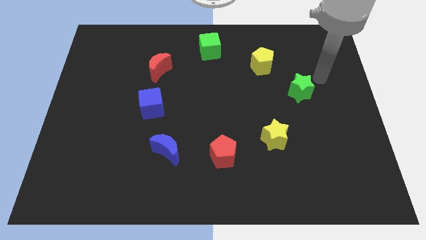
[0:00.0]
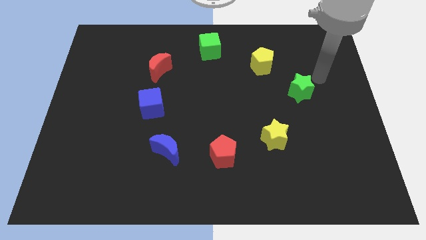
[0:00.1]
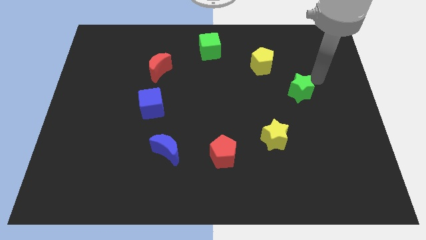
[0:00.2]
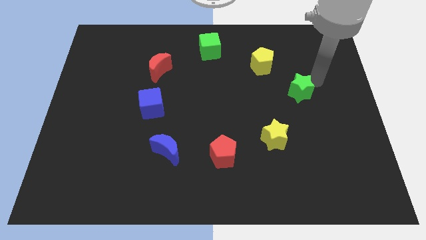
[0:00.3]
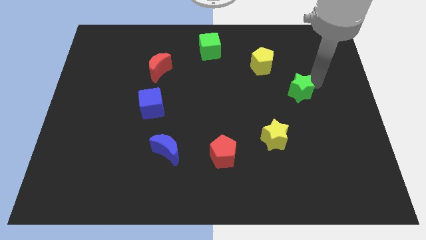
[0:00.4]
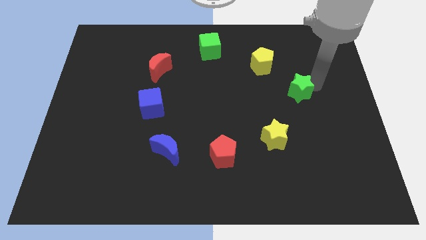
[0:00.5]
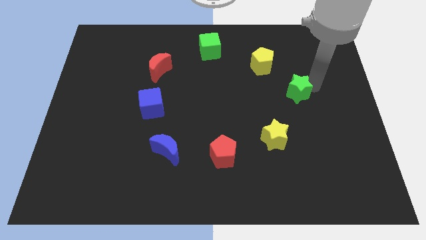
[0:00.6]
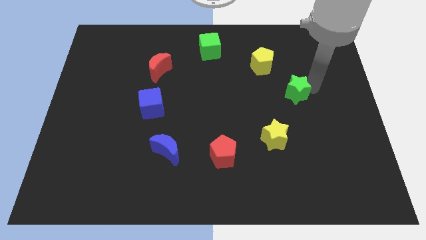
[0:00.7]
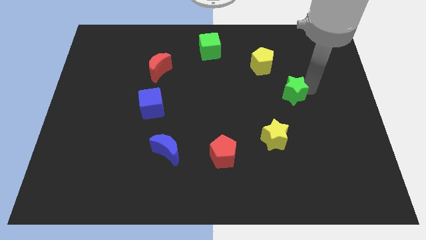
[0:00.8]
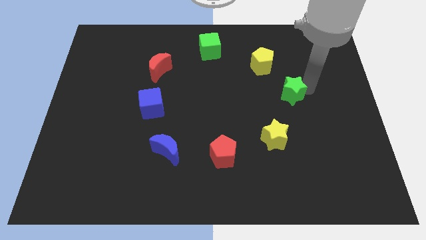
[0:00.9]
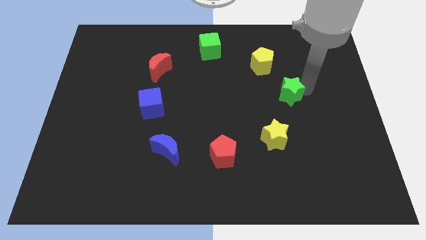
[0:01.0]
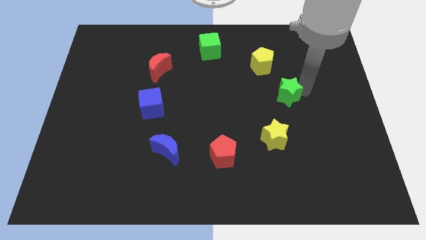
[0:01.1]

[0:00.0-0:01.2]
move the green star to the center of the board

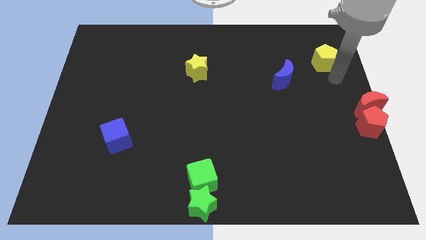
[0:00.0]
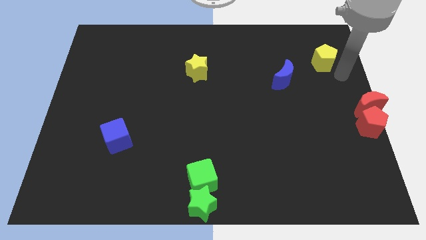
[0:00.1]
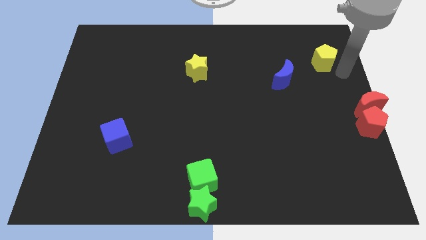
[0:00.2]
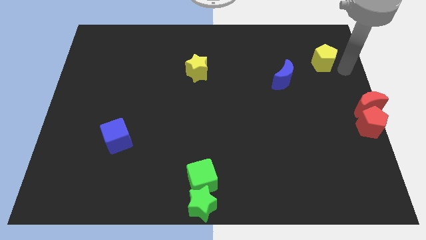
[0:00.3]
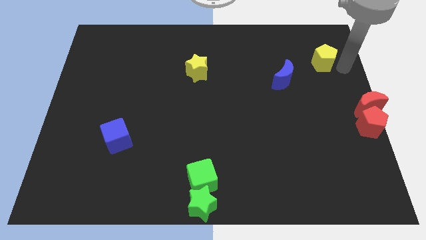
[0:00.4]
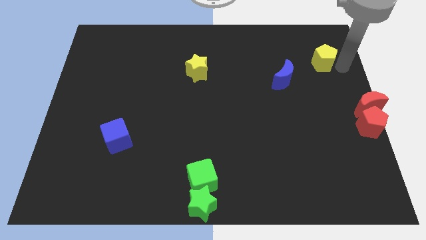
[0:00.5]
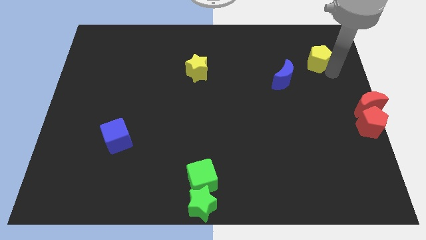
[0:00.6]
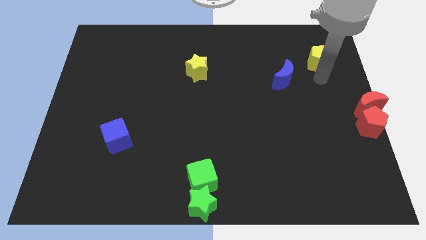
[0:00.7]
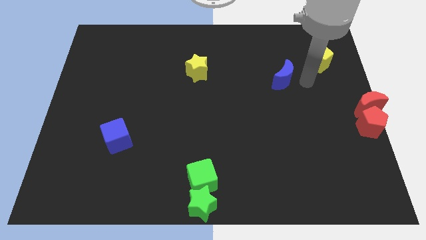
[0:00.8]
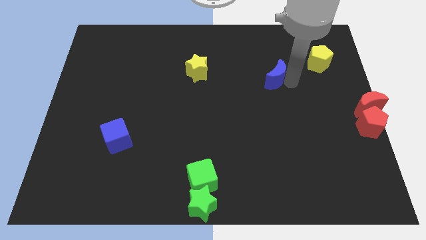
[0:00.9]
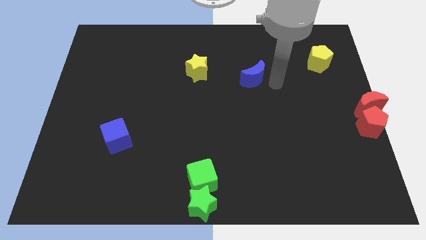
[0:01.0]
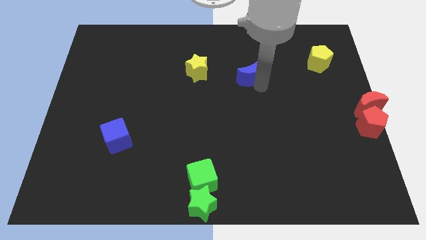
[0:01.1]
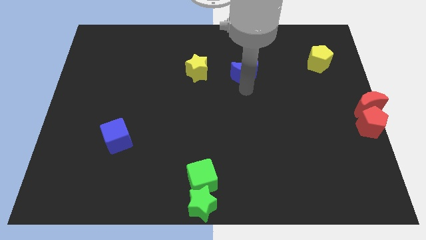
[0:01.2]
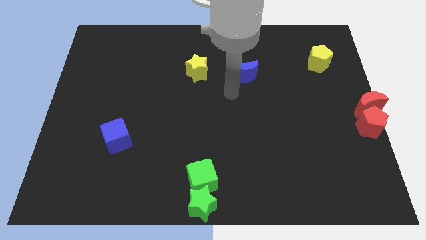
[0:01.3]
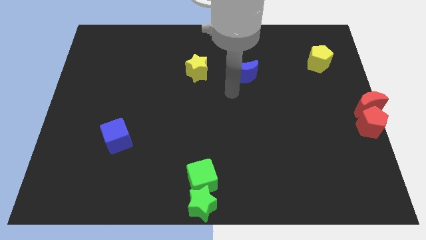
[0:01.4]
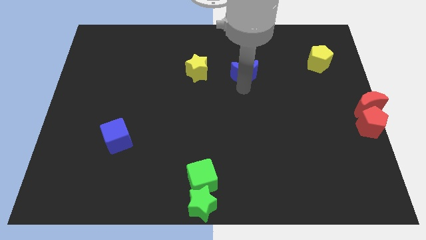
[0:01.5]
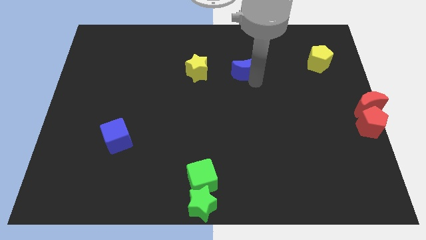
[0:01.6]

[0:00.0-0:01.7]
put the blue crescent at the right side of the yellow star

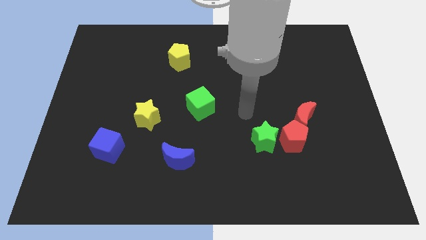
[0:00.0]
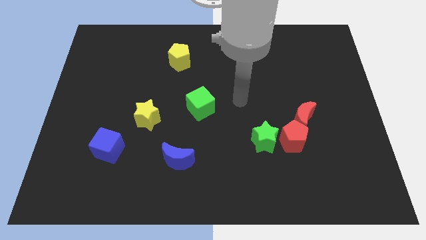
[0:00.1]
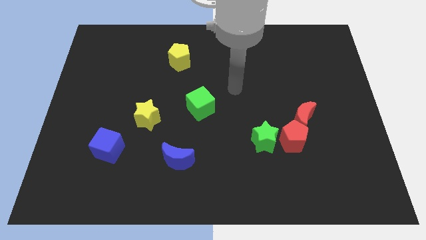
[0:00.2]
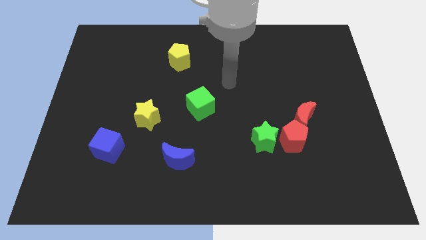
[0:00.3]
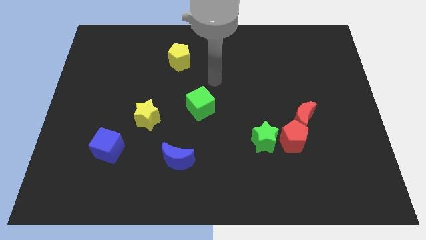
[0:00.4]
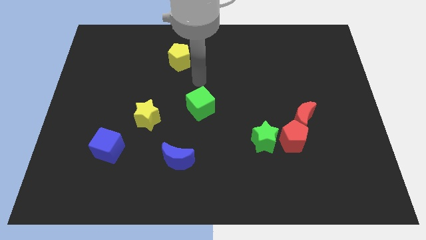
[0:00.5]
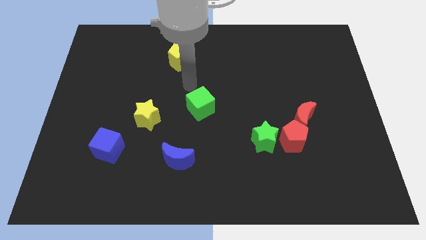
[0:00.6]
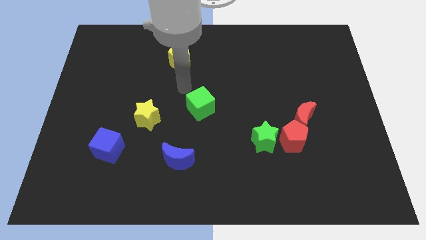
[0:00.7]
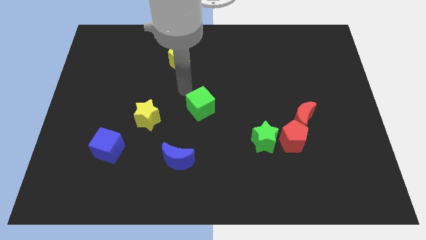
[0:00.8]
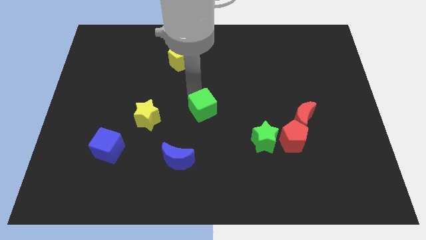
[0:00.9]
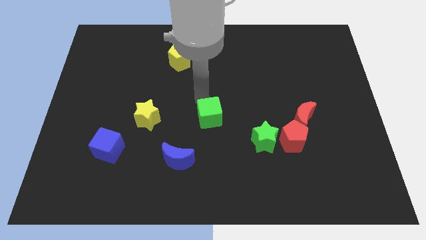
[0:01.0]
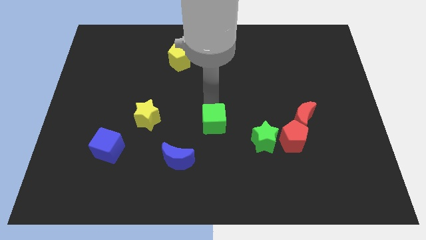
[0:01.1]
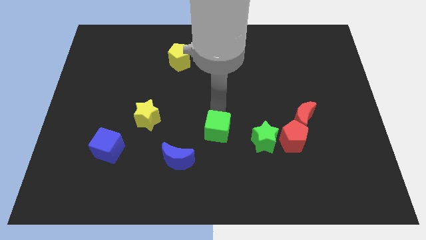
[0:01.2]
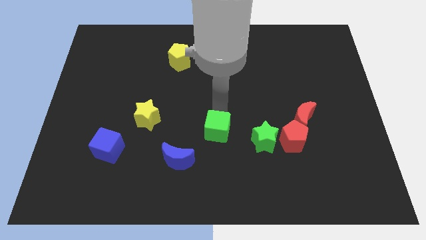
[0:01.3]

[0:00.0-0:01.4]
place the green cube in between the yellow star and green star

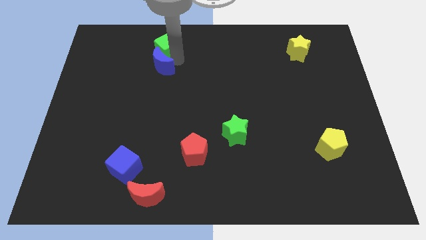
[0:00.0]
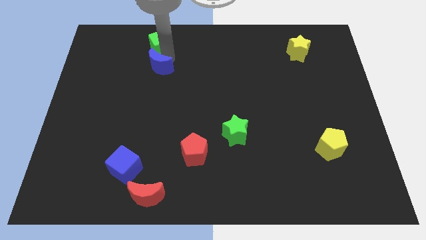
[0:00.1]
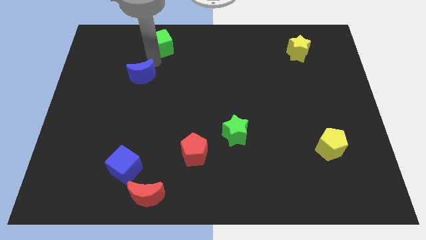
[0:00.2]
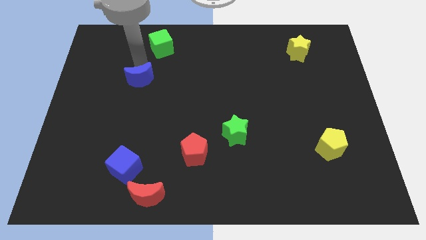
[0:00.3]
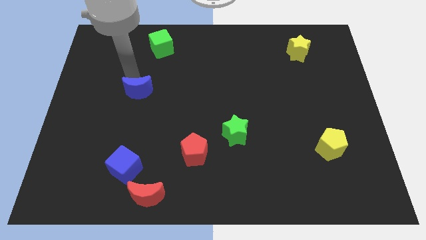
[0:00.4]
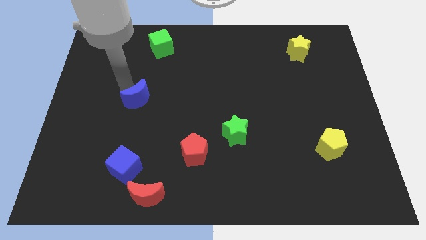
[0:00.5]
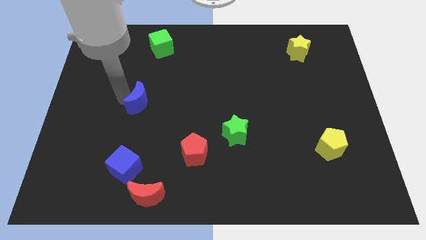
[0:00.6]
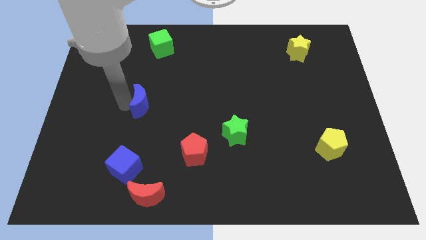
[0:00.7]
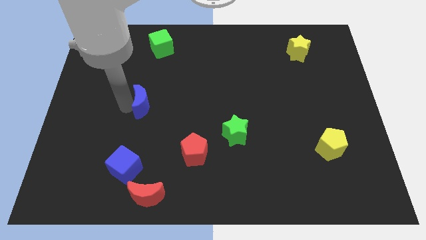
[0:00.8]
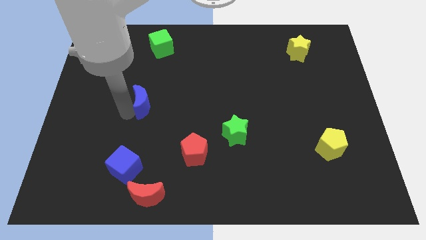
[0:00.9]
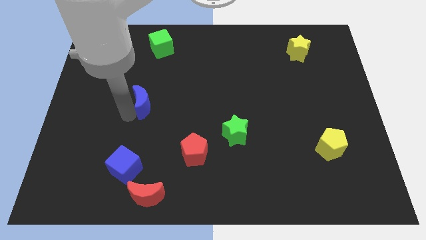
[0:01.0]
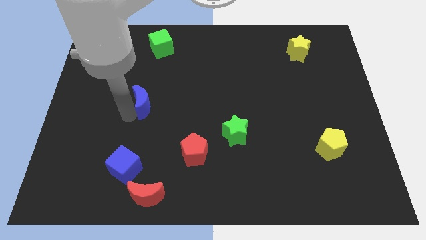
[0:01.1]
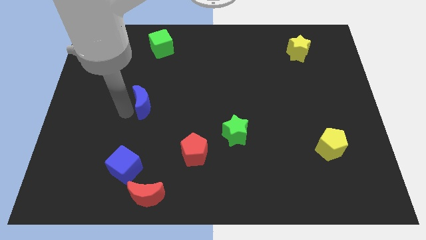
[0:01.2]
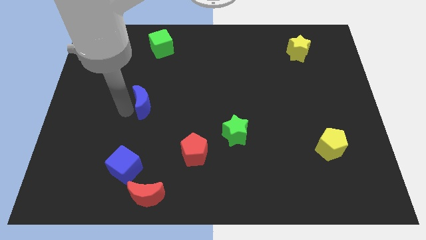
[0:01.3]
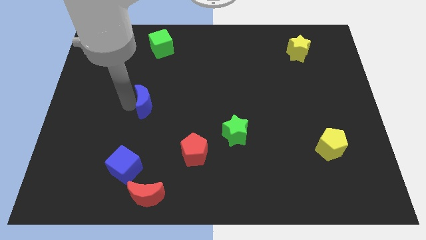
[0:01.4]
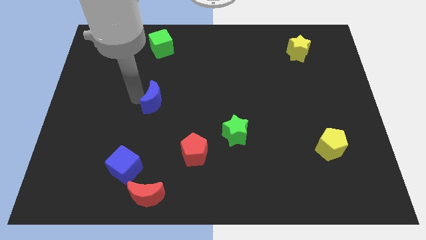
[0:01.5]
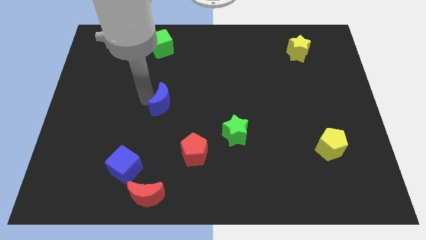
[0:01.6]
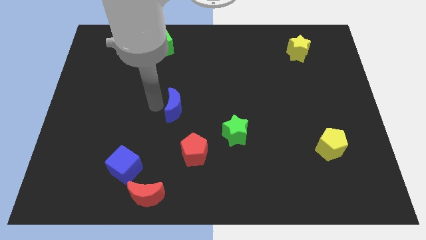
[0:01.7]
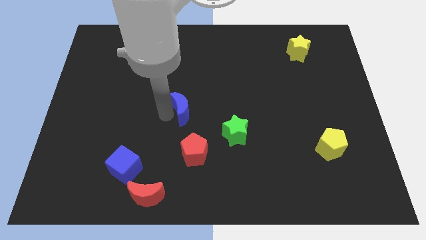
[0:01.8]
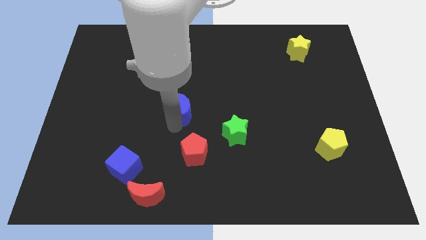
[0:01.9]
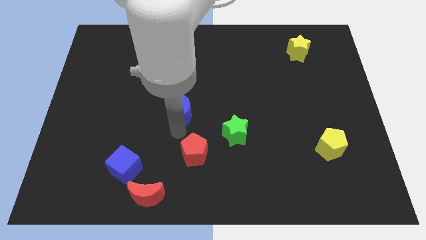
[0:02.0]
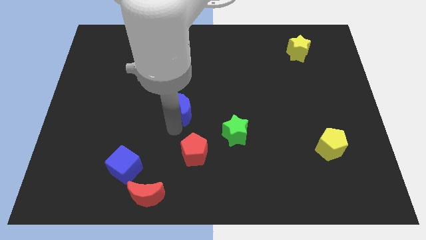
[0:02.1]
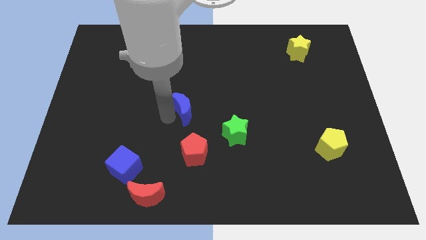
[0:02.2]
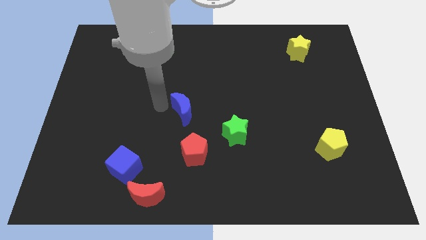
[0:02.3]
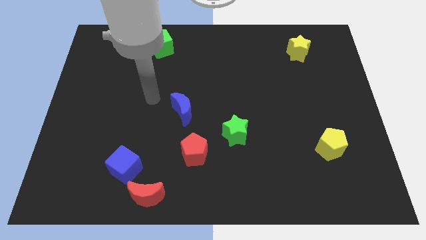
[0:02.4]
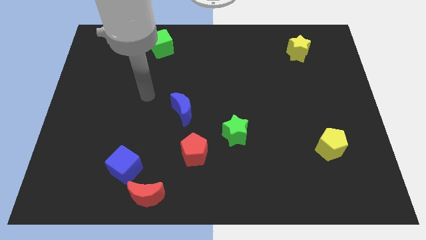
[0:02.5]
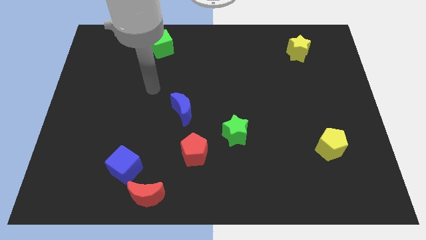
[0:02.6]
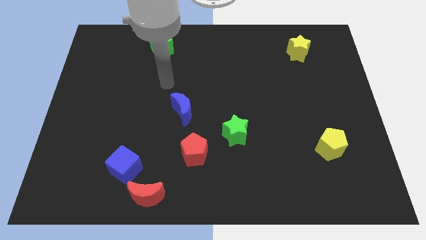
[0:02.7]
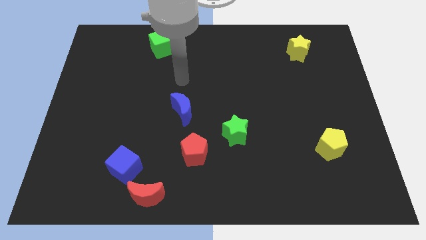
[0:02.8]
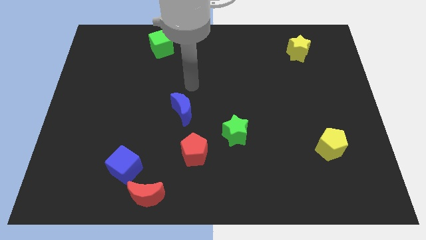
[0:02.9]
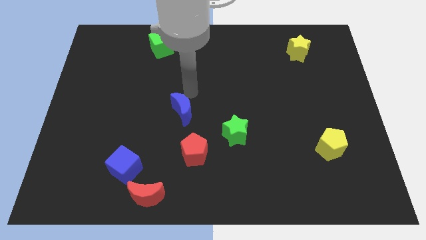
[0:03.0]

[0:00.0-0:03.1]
place blue moon above the red pentagon

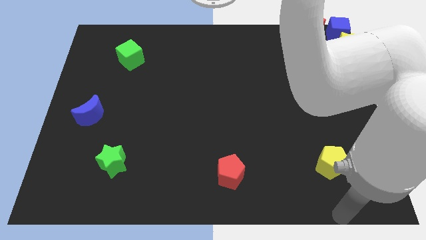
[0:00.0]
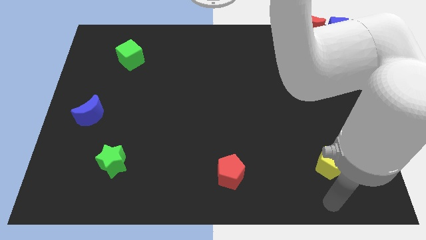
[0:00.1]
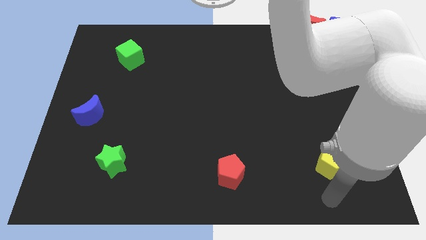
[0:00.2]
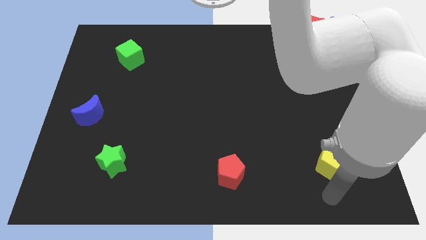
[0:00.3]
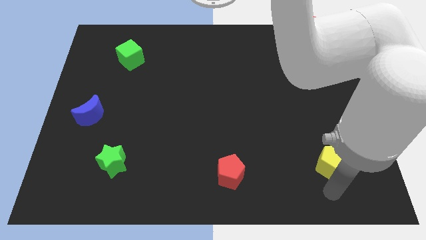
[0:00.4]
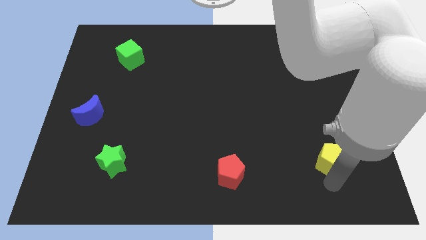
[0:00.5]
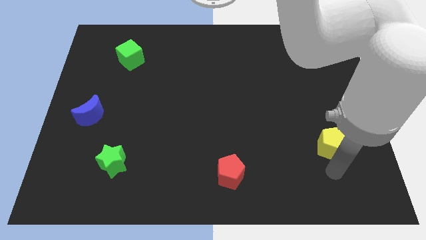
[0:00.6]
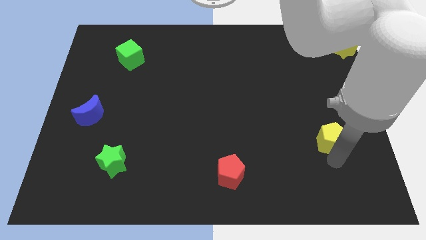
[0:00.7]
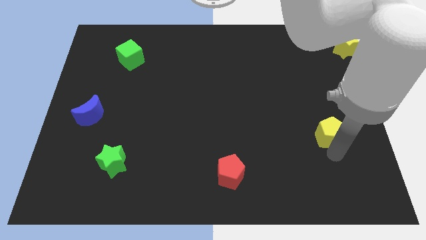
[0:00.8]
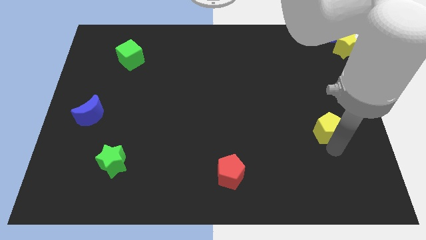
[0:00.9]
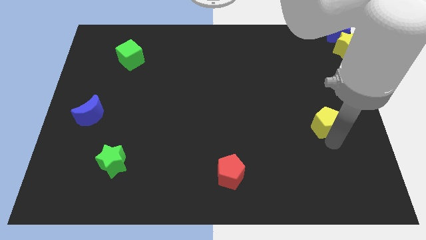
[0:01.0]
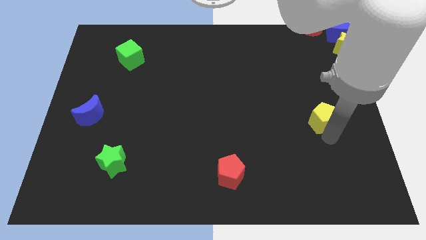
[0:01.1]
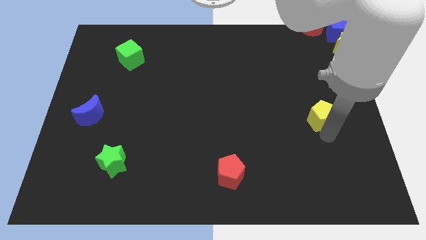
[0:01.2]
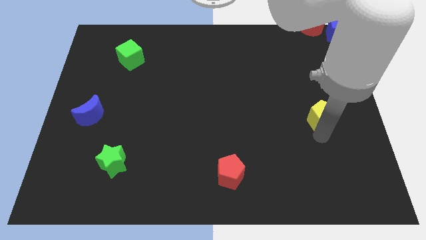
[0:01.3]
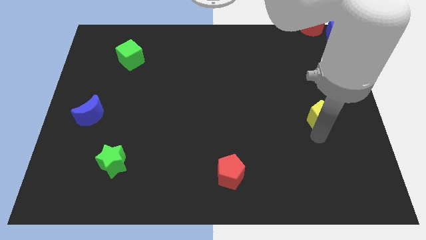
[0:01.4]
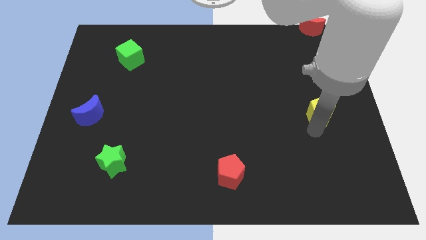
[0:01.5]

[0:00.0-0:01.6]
move the yellow pentagon towards the top right side
